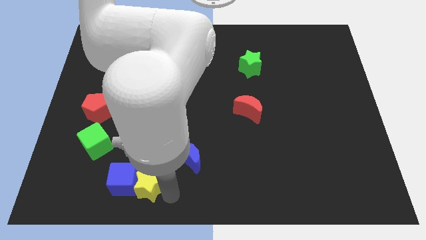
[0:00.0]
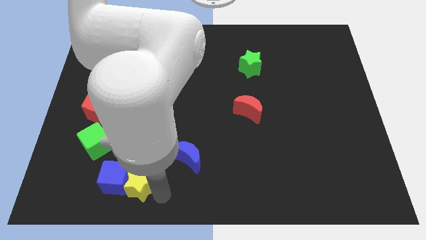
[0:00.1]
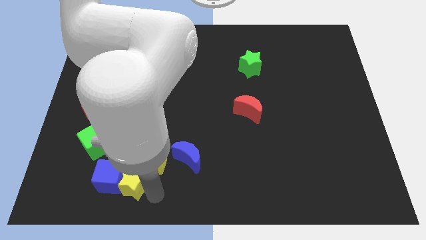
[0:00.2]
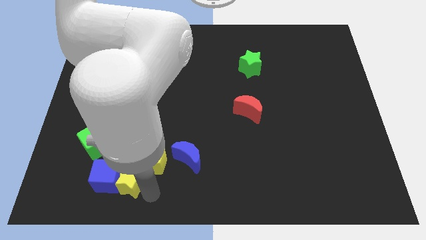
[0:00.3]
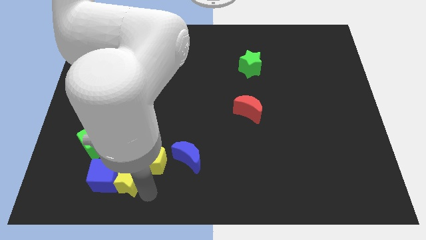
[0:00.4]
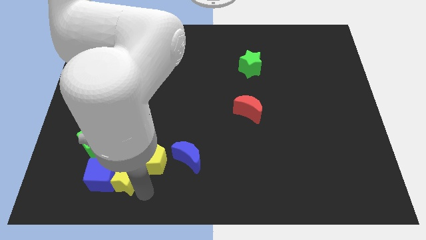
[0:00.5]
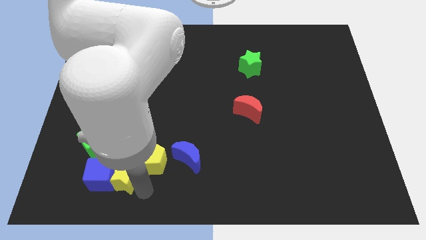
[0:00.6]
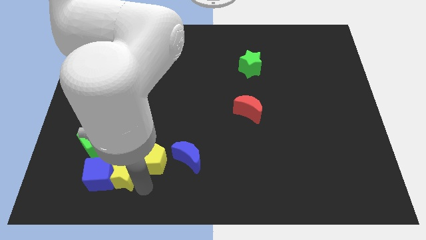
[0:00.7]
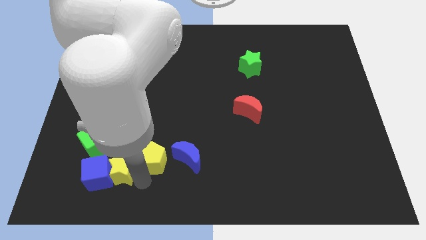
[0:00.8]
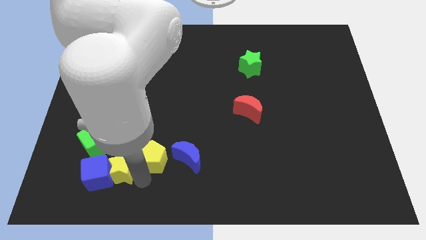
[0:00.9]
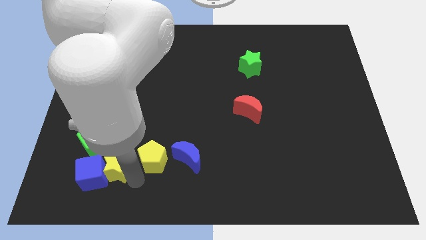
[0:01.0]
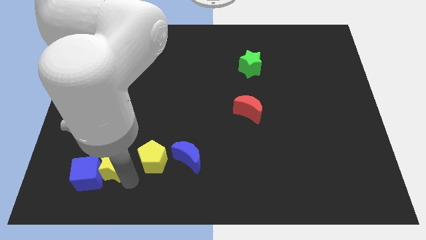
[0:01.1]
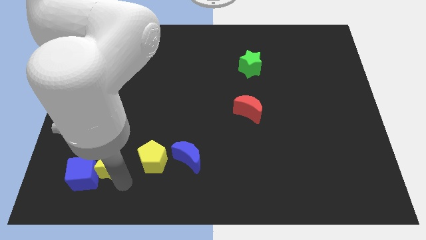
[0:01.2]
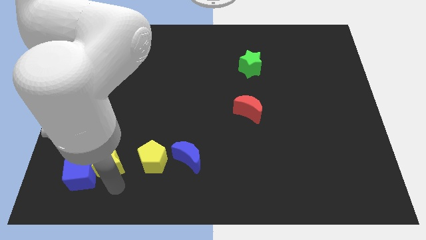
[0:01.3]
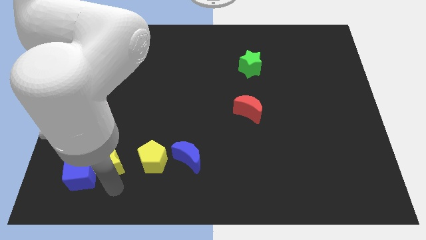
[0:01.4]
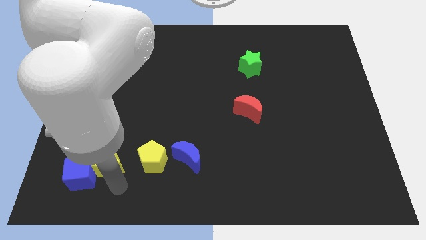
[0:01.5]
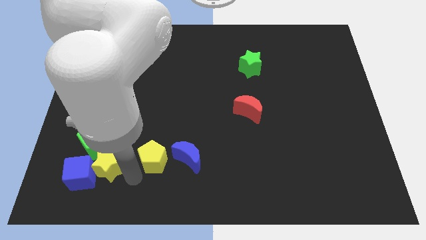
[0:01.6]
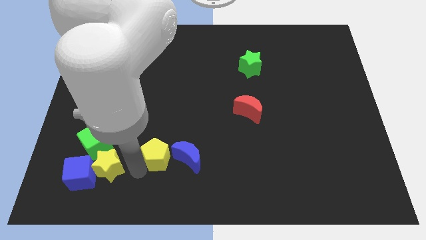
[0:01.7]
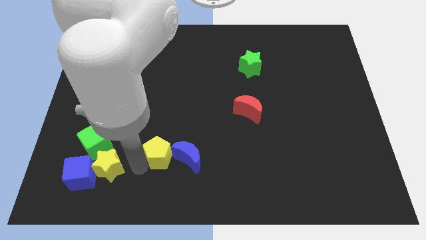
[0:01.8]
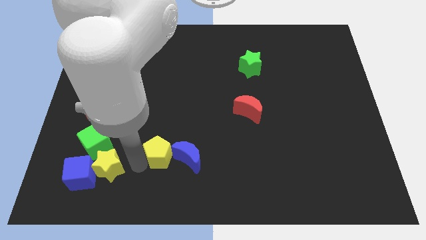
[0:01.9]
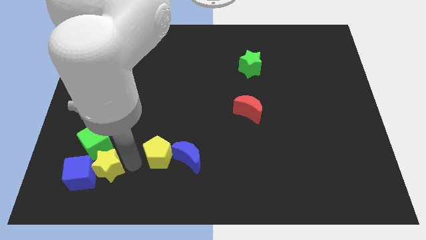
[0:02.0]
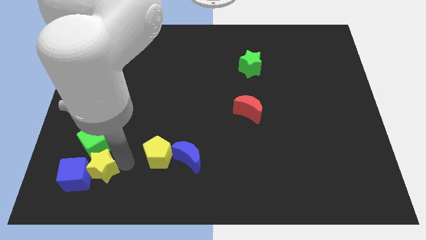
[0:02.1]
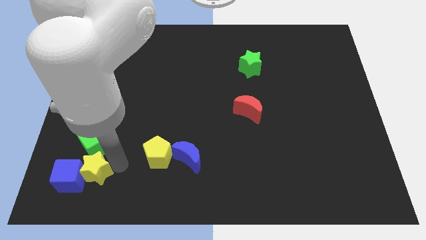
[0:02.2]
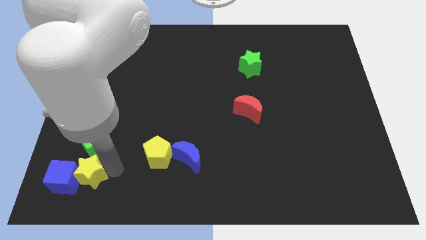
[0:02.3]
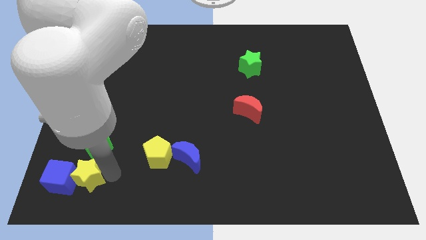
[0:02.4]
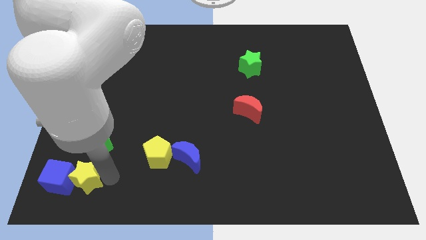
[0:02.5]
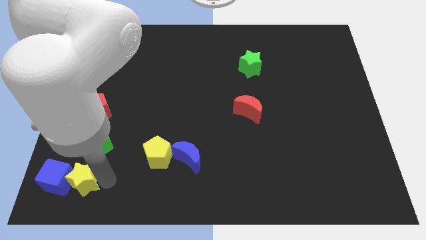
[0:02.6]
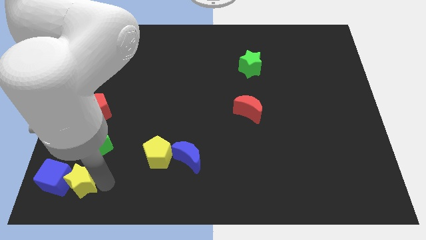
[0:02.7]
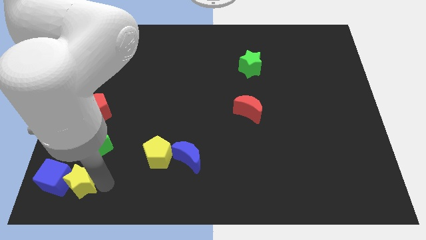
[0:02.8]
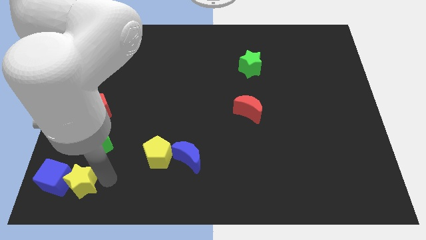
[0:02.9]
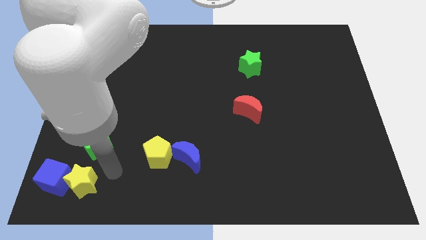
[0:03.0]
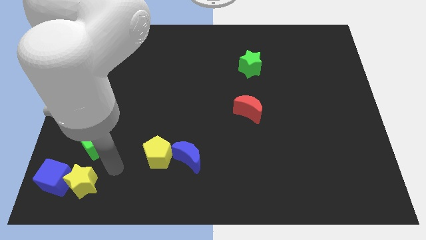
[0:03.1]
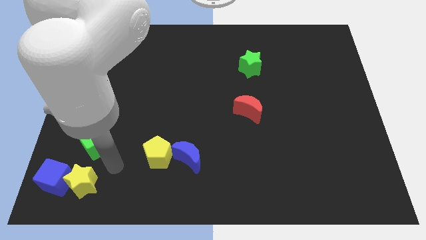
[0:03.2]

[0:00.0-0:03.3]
push the yellow star into the blue cube

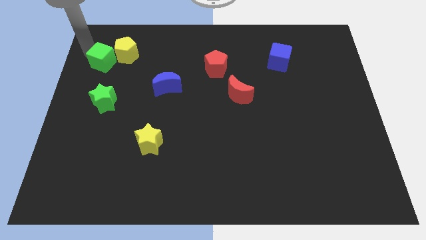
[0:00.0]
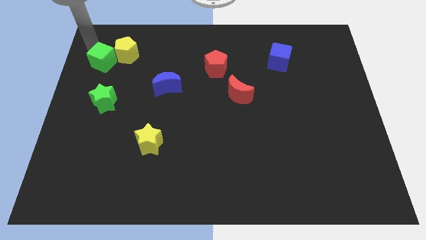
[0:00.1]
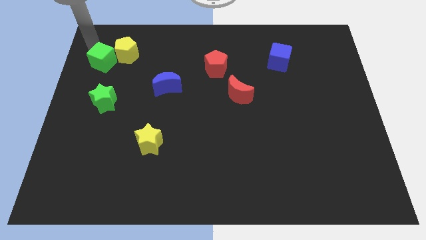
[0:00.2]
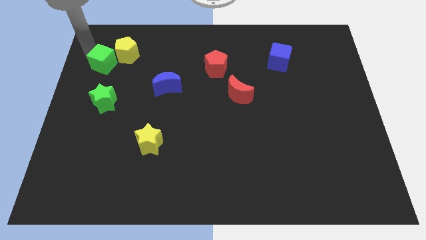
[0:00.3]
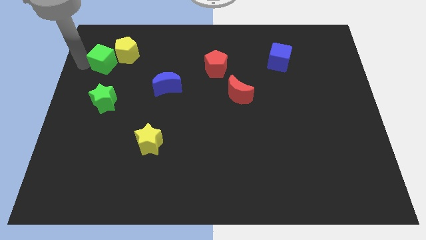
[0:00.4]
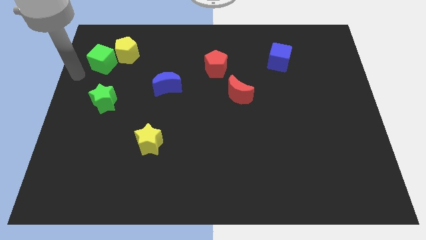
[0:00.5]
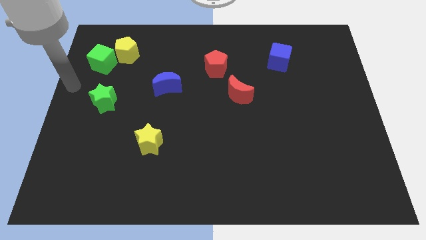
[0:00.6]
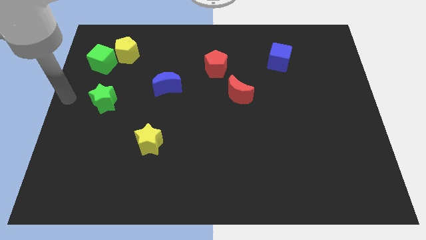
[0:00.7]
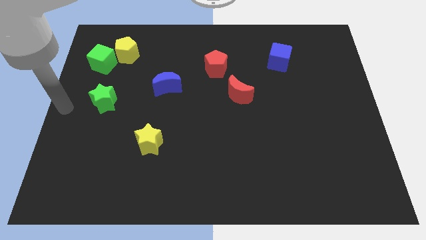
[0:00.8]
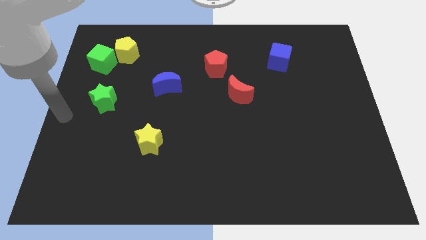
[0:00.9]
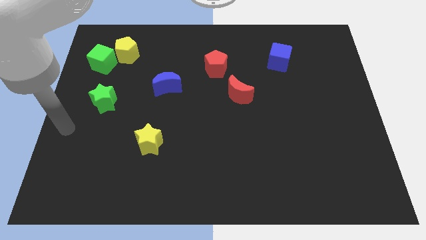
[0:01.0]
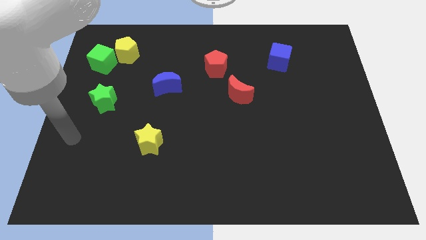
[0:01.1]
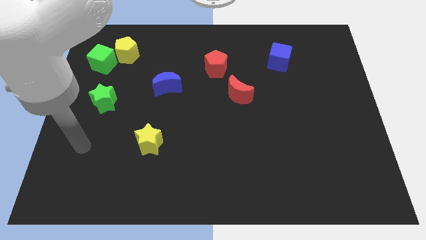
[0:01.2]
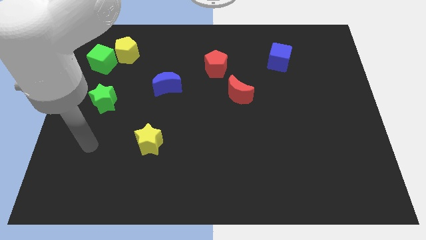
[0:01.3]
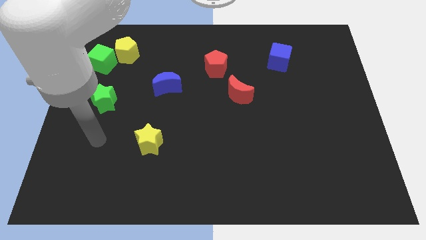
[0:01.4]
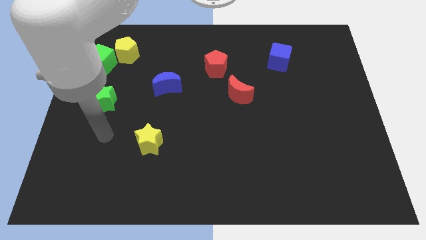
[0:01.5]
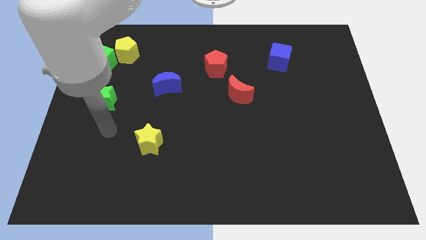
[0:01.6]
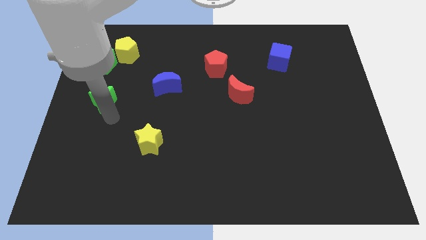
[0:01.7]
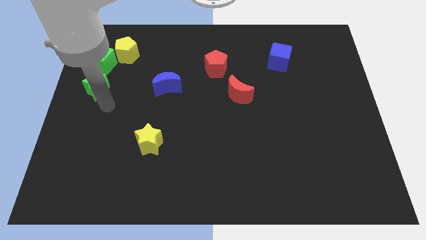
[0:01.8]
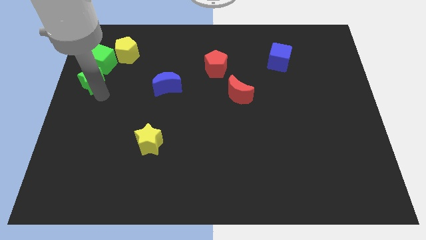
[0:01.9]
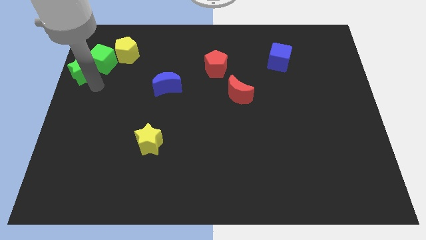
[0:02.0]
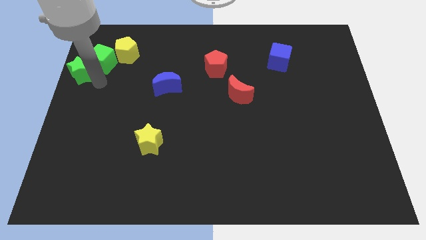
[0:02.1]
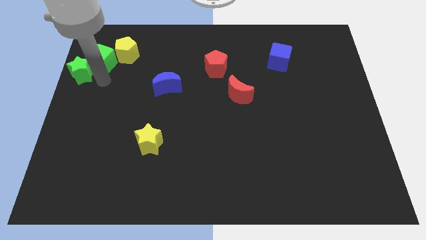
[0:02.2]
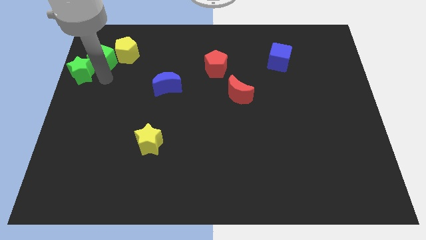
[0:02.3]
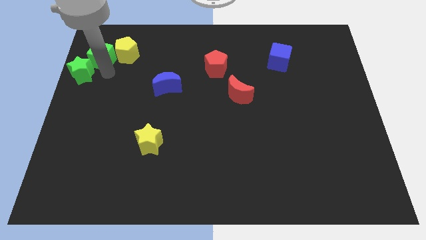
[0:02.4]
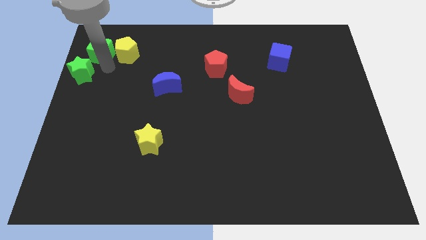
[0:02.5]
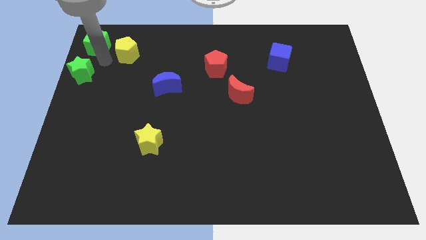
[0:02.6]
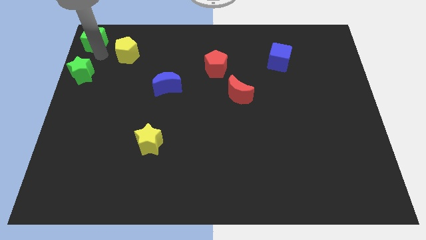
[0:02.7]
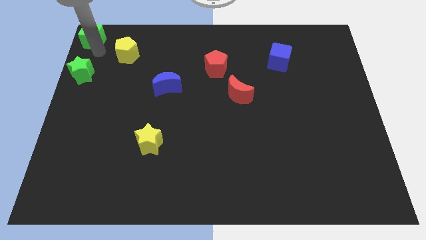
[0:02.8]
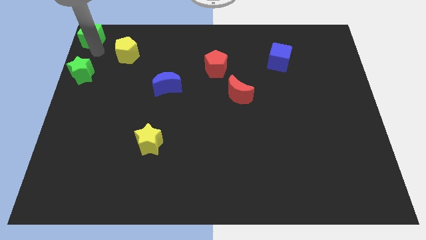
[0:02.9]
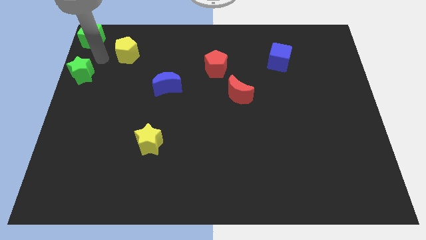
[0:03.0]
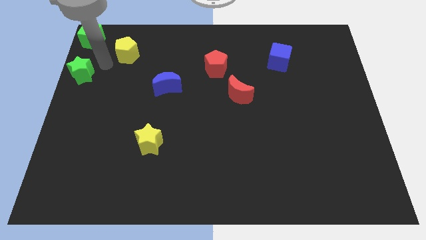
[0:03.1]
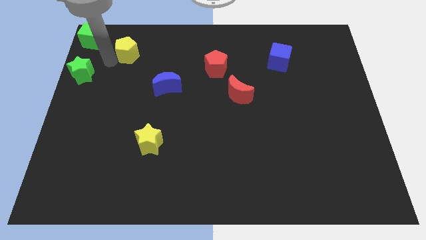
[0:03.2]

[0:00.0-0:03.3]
separate green cube from yellow pentagon

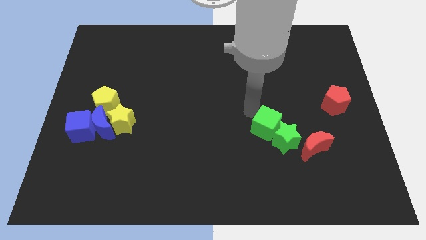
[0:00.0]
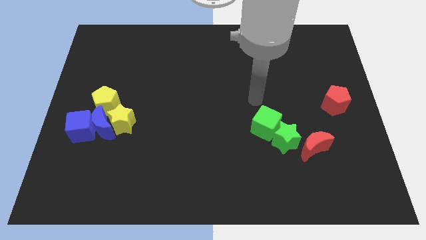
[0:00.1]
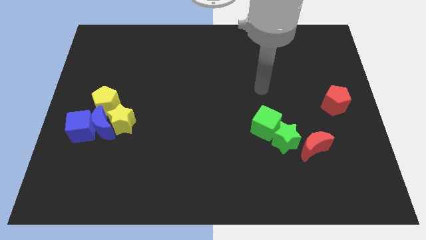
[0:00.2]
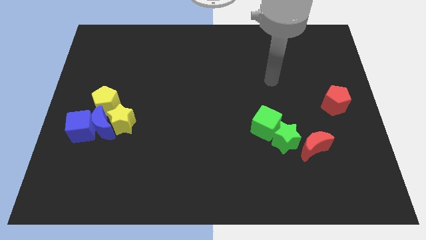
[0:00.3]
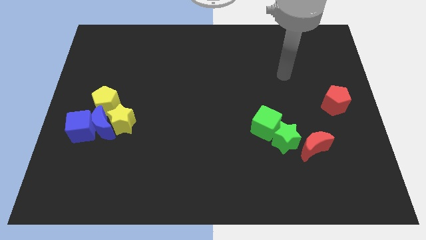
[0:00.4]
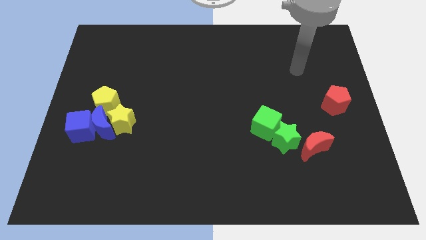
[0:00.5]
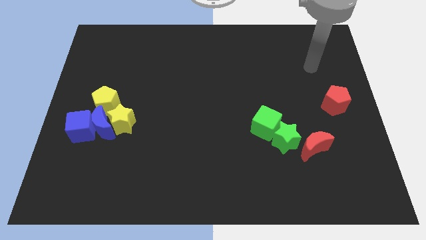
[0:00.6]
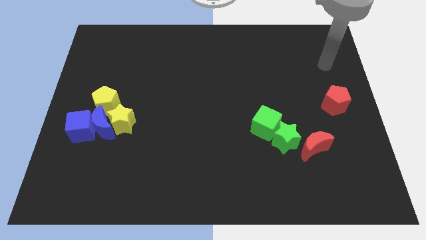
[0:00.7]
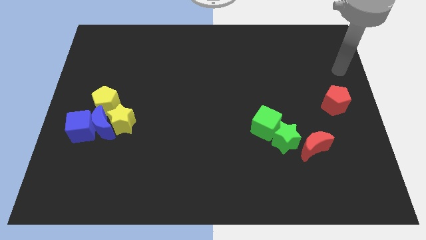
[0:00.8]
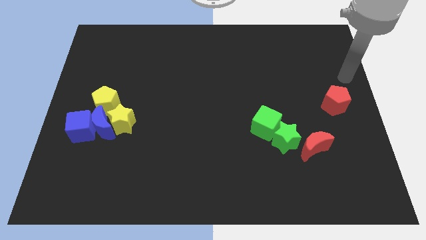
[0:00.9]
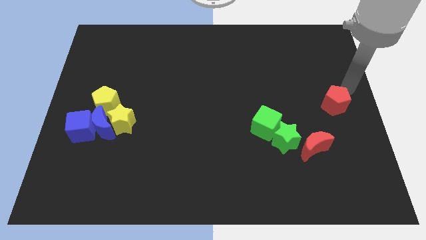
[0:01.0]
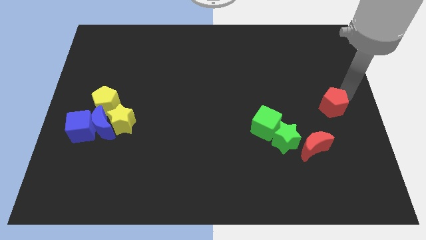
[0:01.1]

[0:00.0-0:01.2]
move your arm towards the red petnagon

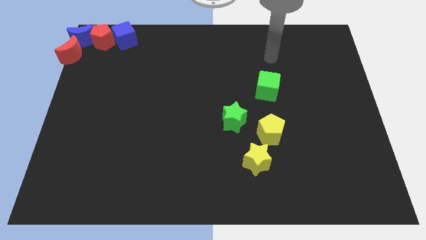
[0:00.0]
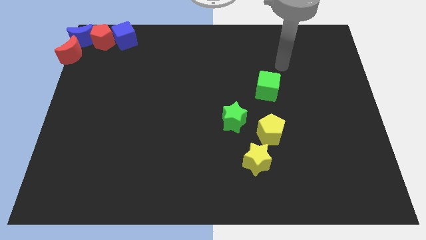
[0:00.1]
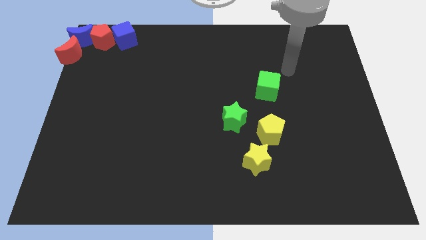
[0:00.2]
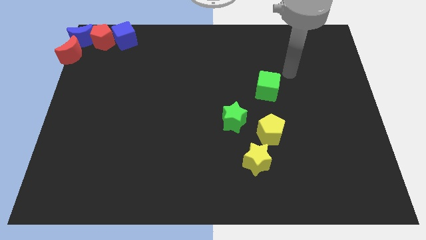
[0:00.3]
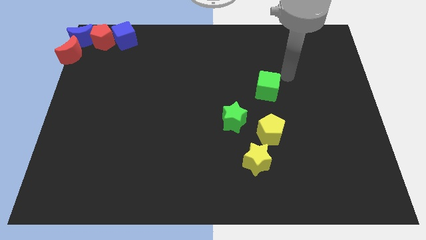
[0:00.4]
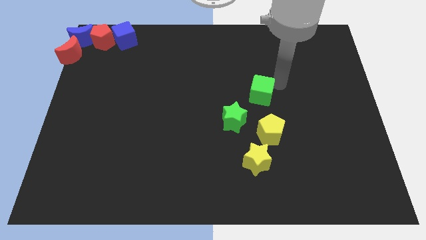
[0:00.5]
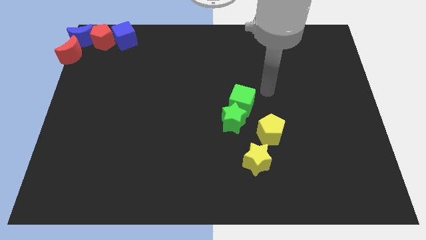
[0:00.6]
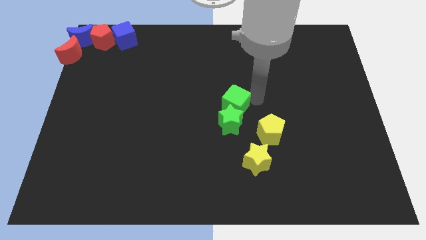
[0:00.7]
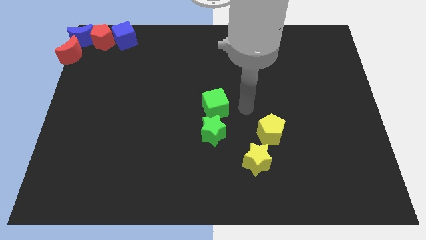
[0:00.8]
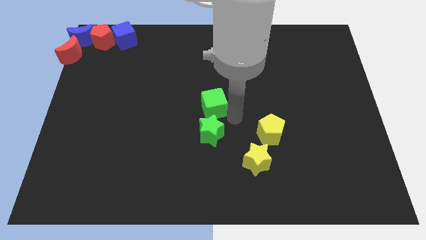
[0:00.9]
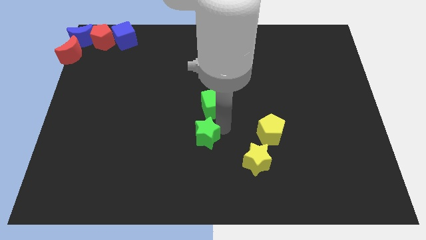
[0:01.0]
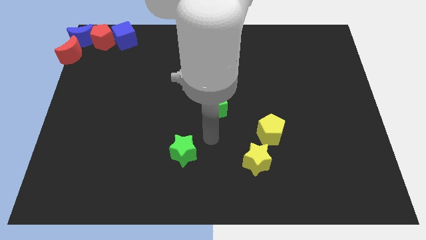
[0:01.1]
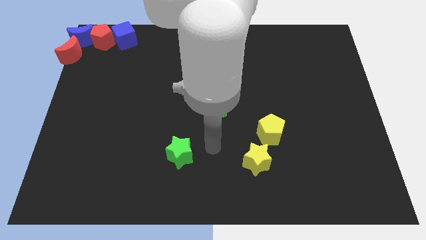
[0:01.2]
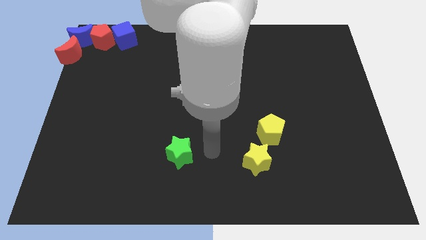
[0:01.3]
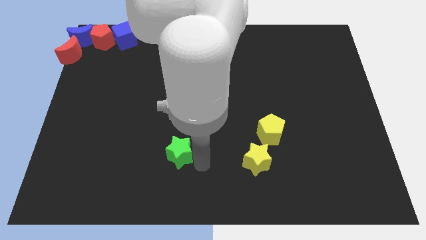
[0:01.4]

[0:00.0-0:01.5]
move the green star to the left of the yellow star
